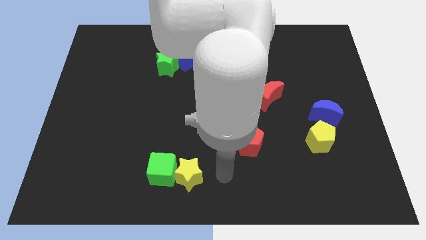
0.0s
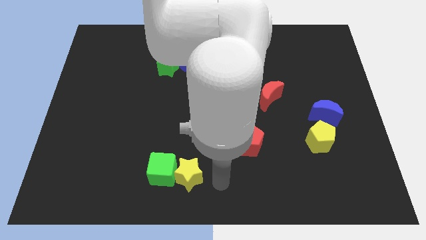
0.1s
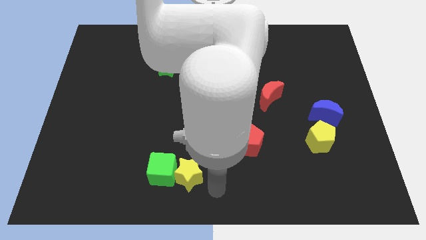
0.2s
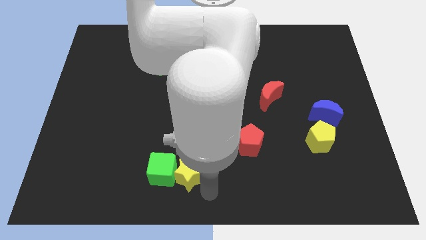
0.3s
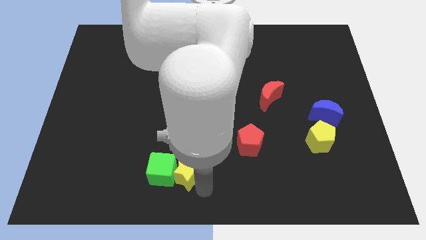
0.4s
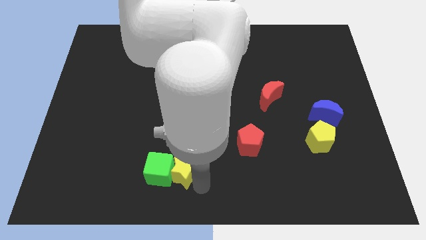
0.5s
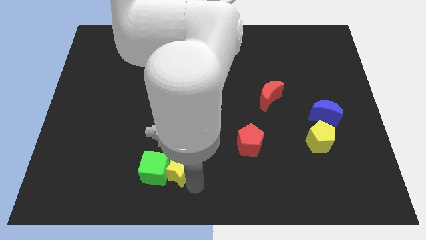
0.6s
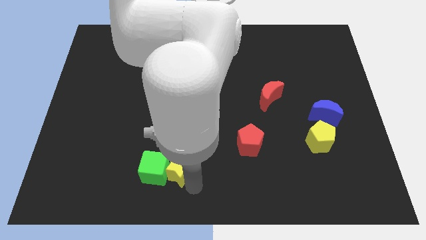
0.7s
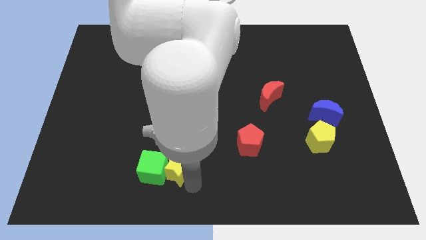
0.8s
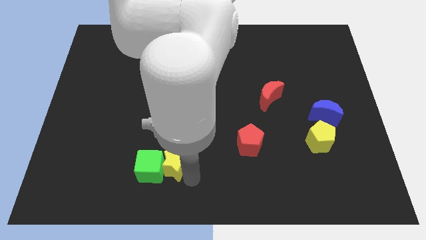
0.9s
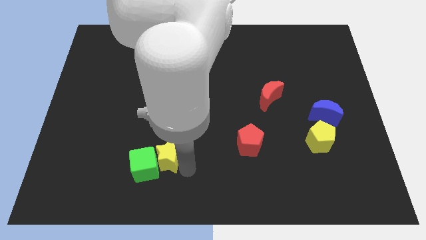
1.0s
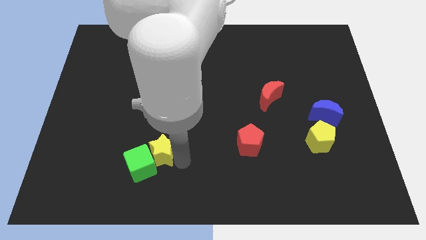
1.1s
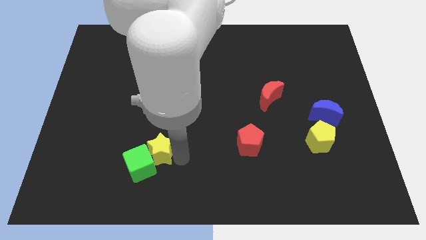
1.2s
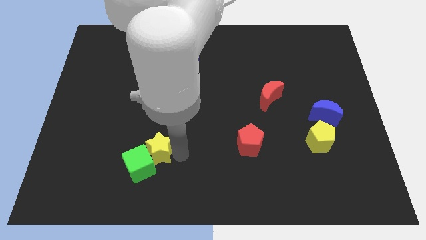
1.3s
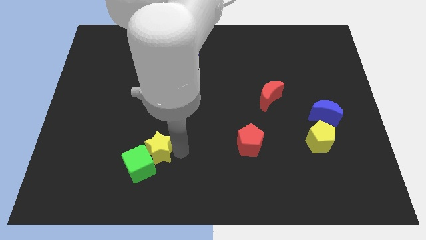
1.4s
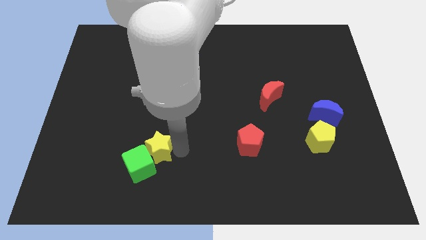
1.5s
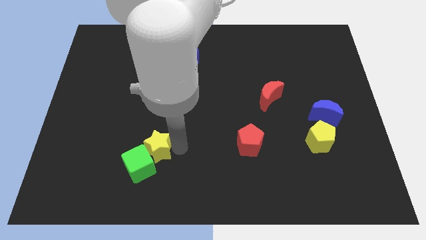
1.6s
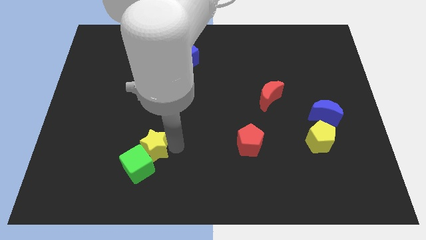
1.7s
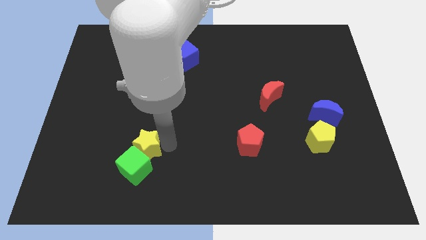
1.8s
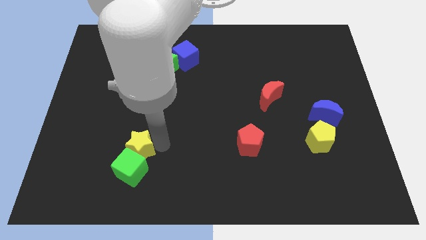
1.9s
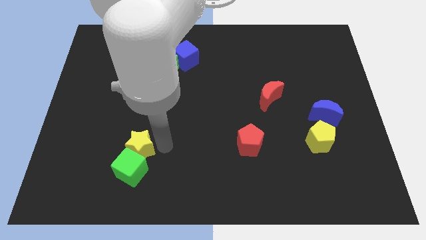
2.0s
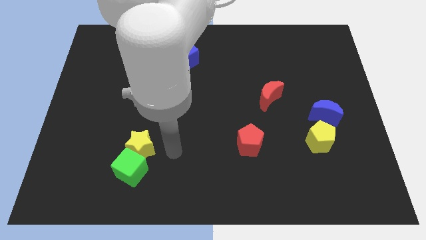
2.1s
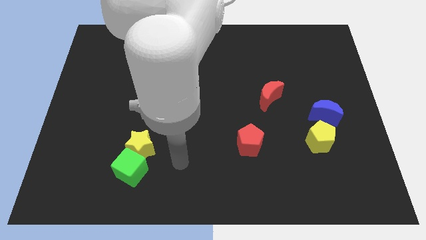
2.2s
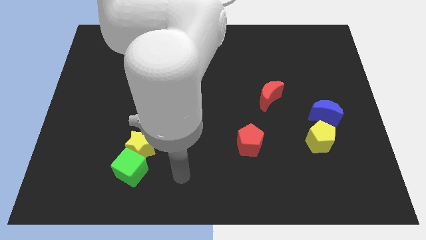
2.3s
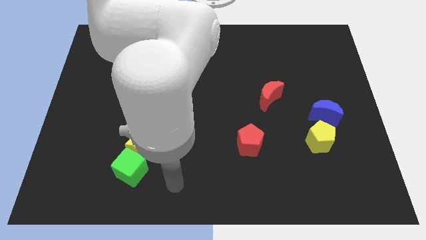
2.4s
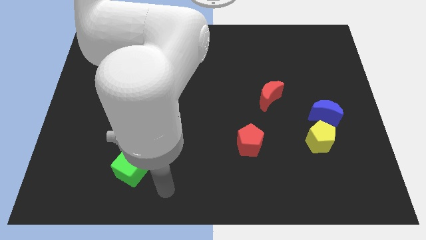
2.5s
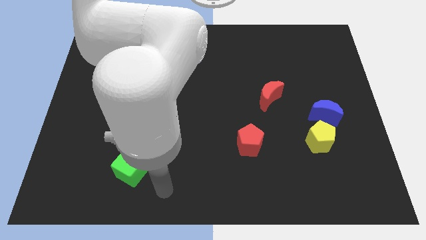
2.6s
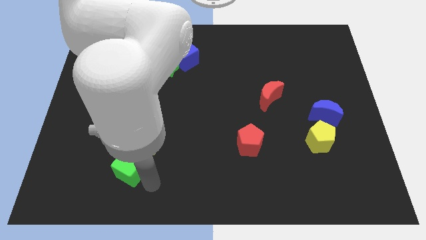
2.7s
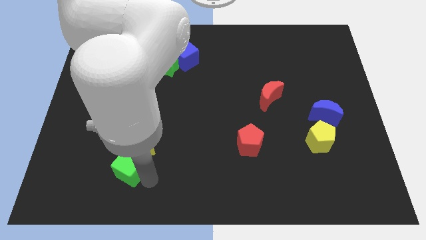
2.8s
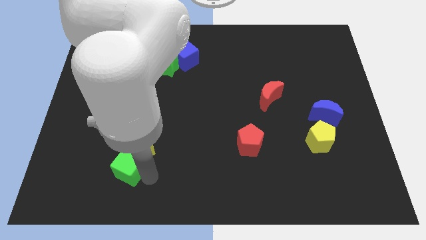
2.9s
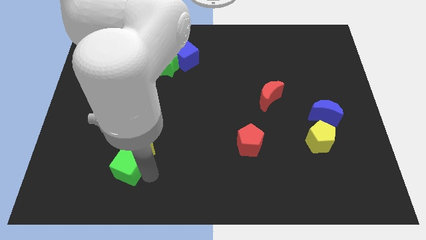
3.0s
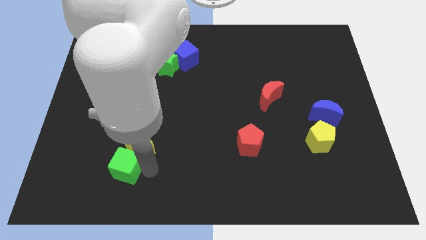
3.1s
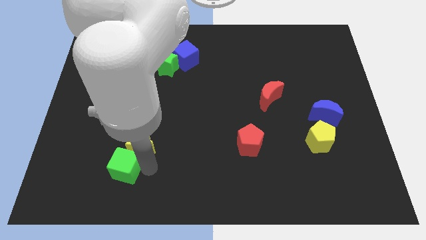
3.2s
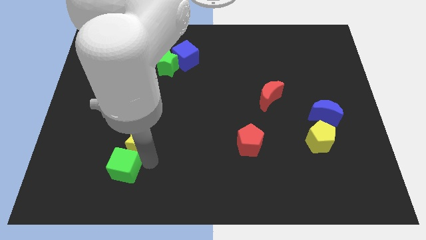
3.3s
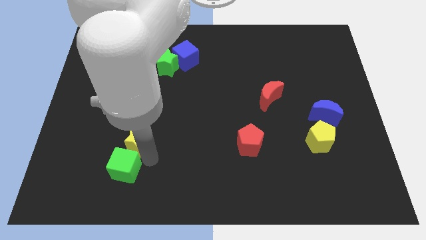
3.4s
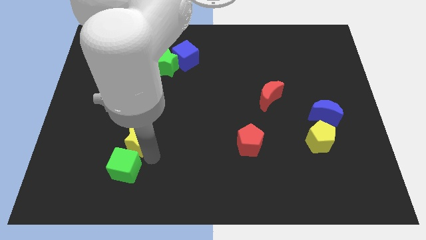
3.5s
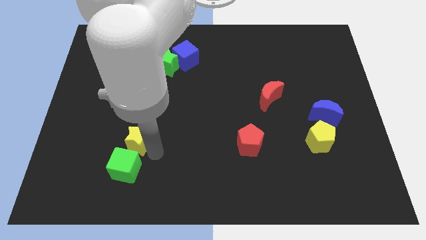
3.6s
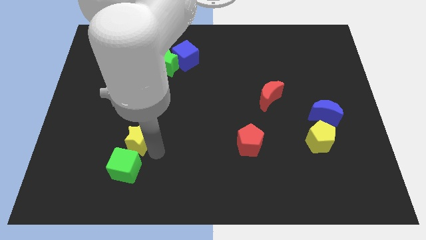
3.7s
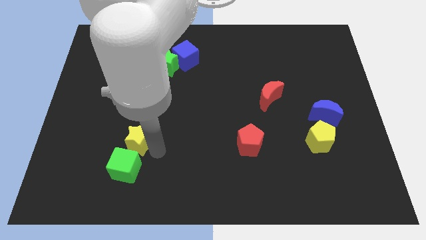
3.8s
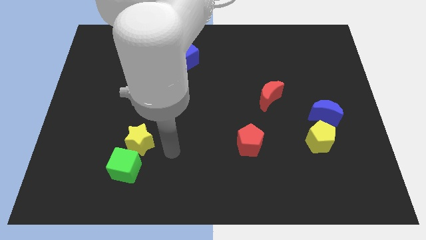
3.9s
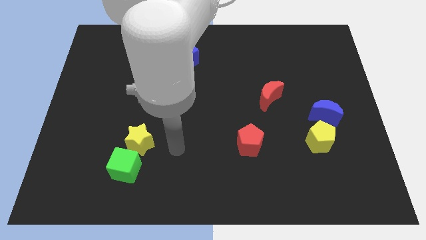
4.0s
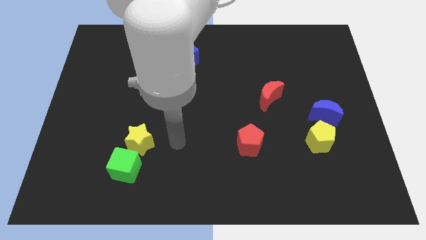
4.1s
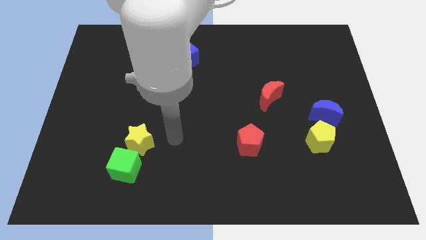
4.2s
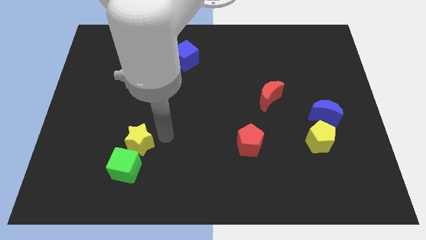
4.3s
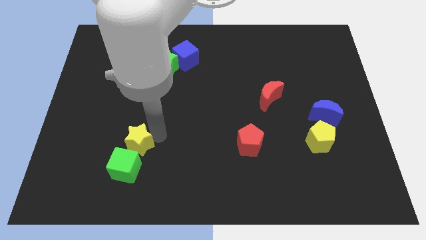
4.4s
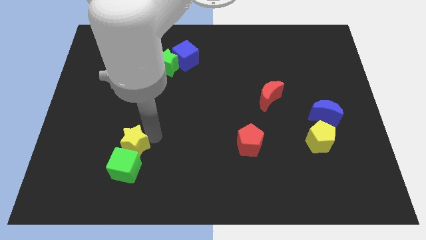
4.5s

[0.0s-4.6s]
place the yellow star left to the red pentagon

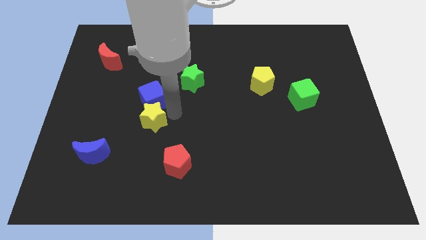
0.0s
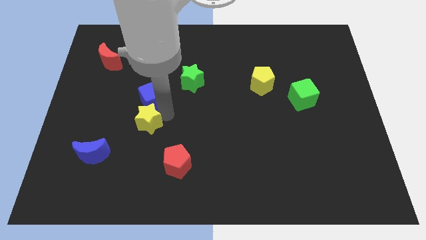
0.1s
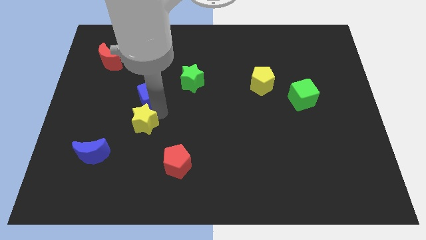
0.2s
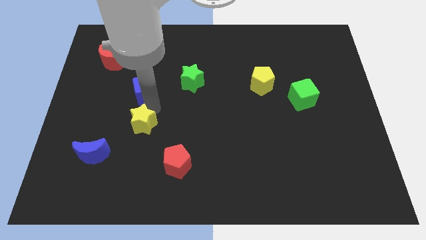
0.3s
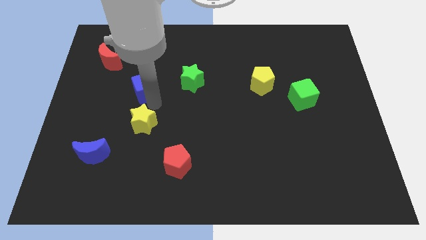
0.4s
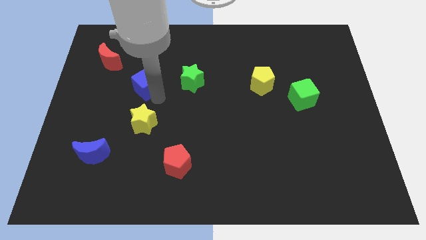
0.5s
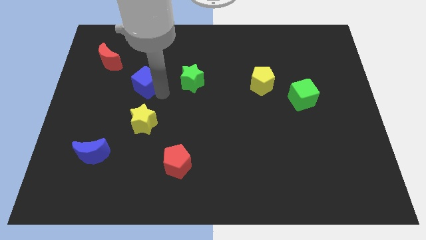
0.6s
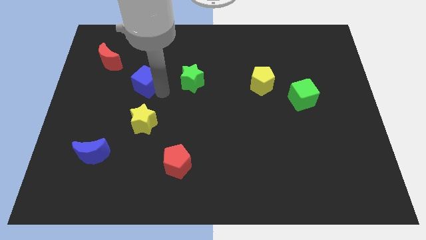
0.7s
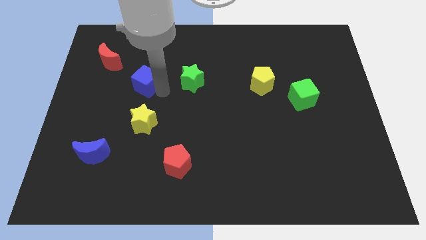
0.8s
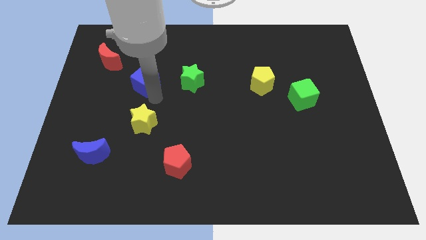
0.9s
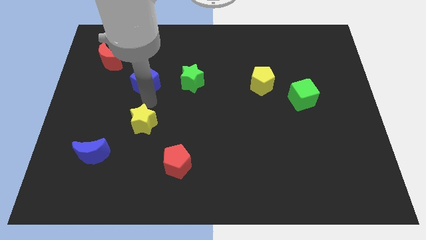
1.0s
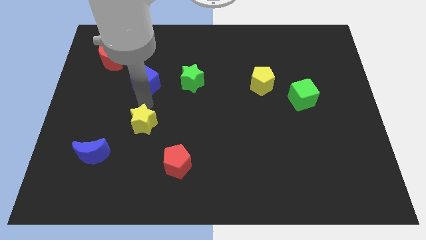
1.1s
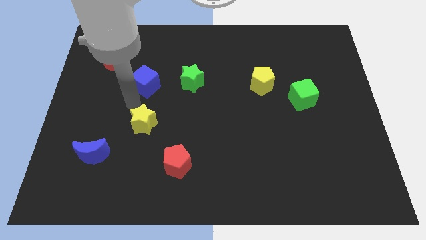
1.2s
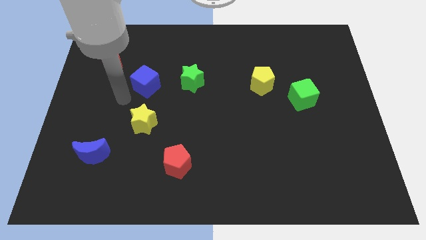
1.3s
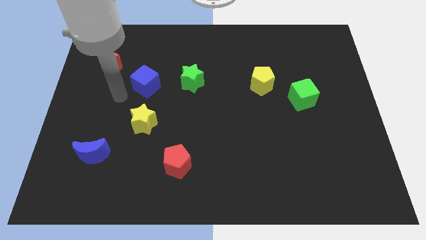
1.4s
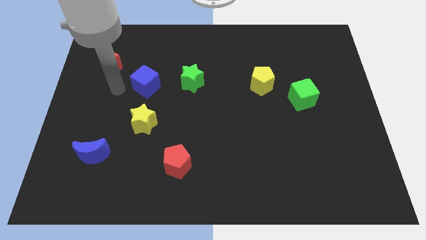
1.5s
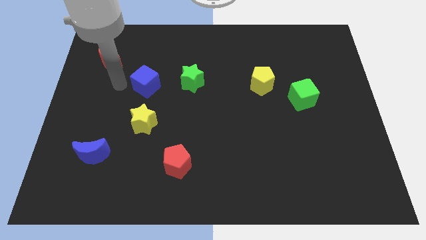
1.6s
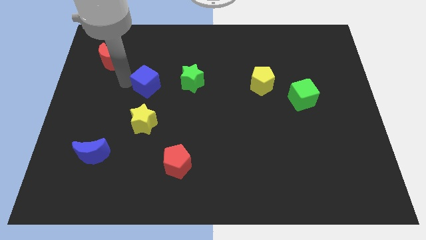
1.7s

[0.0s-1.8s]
drag blue cube and the yellow star away from each other

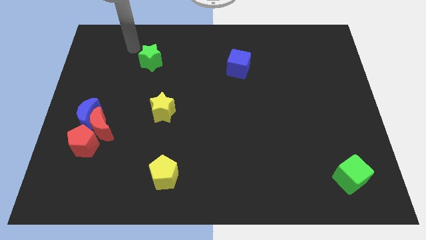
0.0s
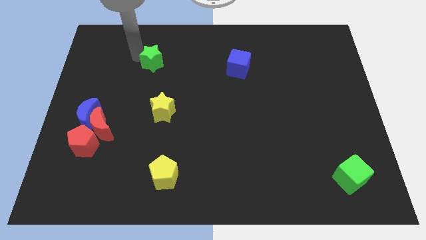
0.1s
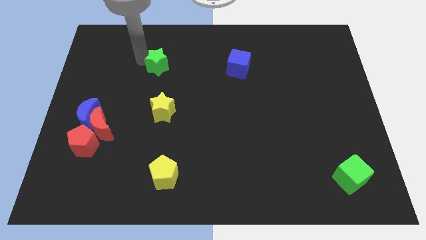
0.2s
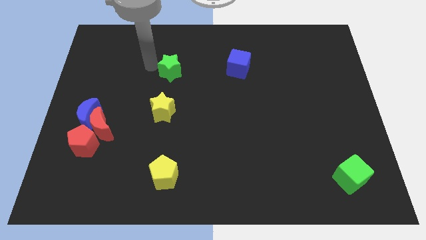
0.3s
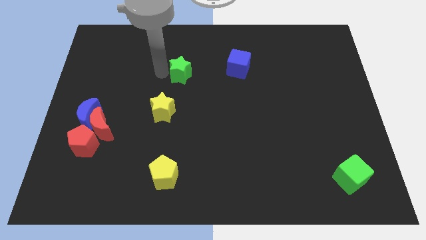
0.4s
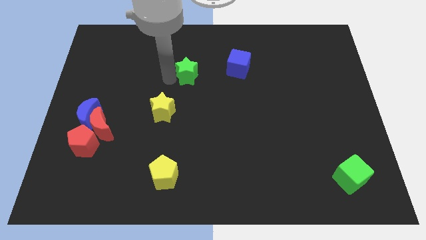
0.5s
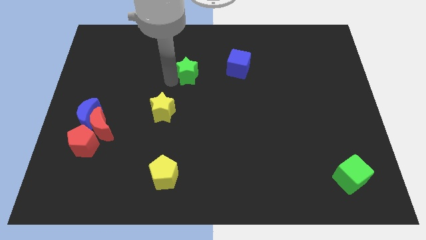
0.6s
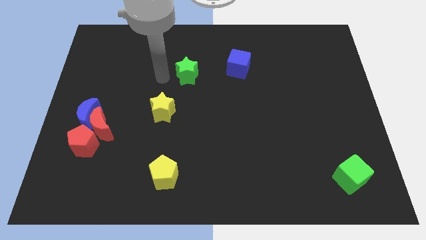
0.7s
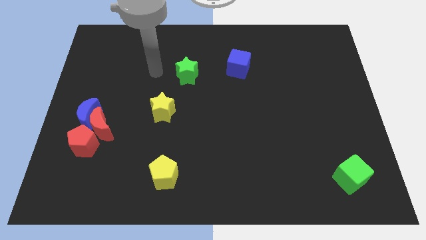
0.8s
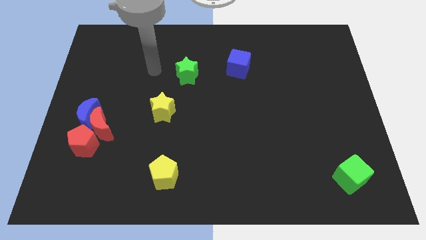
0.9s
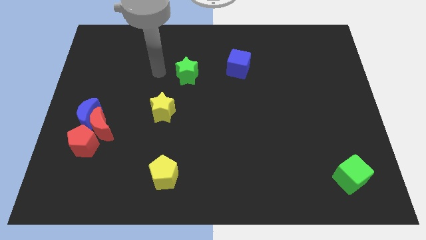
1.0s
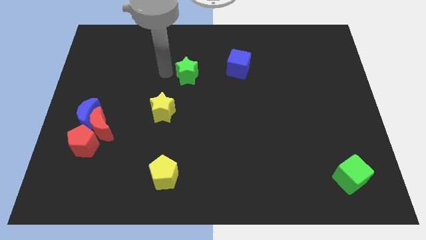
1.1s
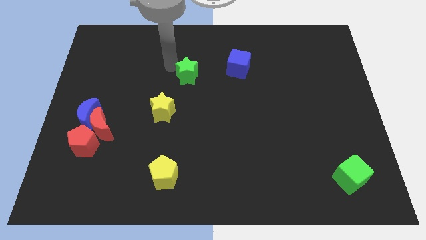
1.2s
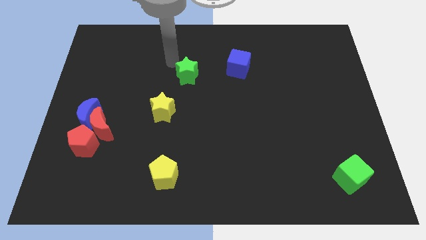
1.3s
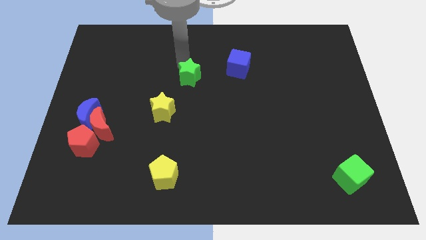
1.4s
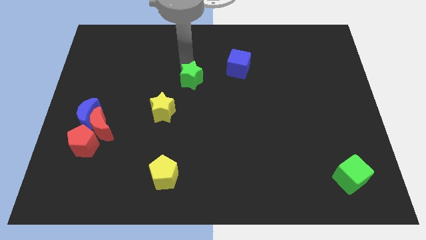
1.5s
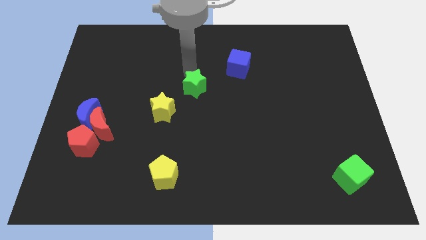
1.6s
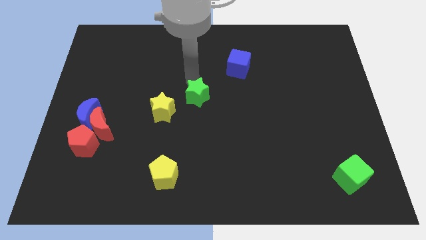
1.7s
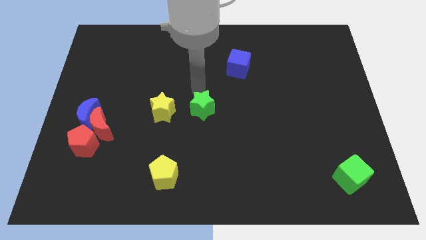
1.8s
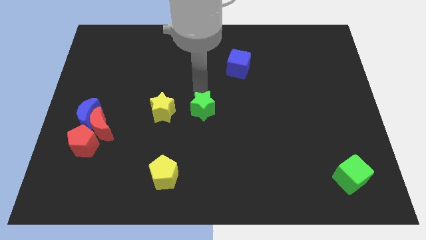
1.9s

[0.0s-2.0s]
move the green star right beside the yellow star

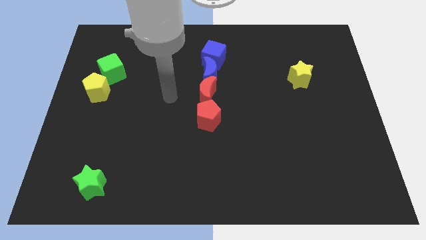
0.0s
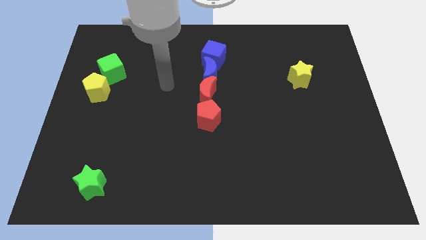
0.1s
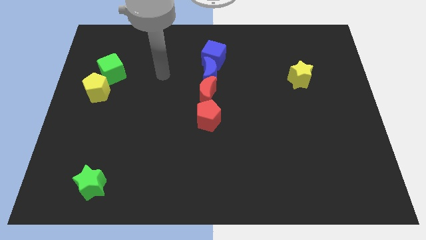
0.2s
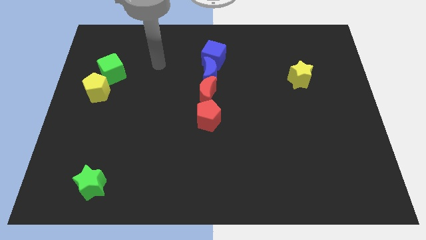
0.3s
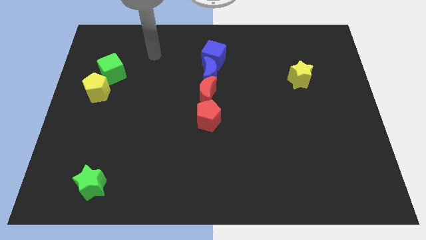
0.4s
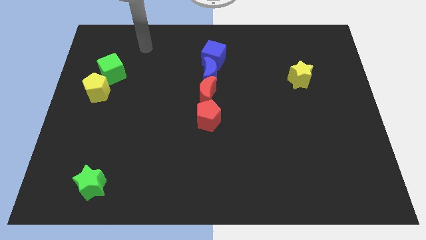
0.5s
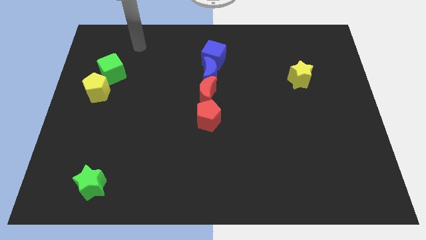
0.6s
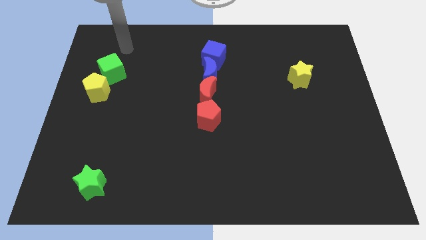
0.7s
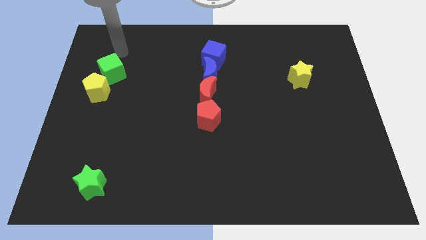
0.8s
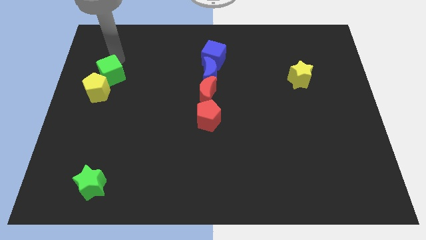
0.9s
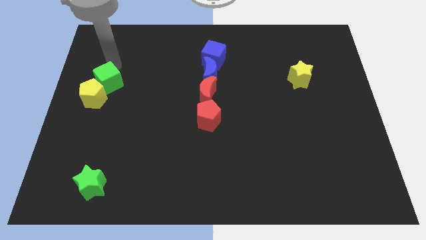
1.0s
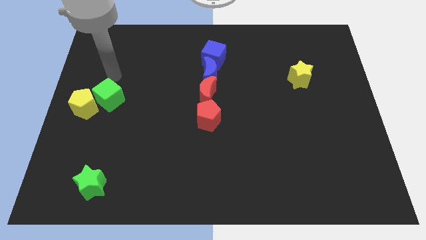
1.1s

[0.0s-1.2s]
push the green cube into the yellow pentagon
